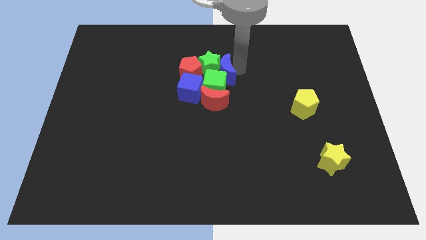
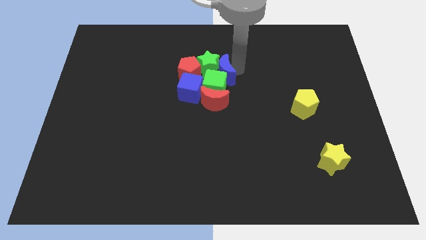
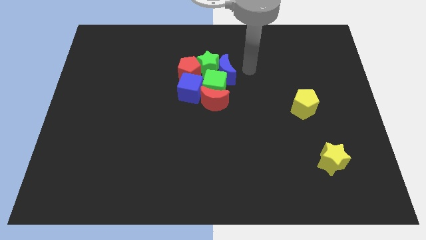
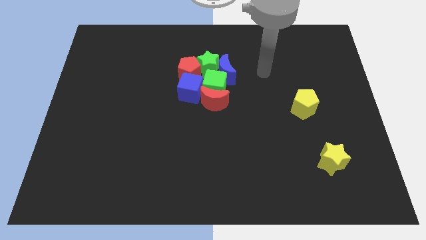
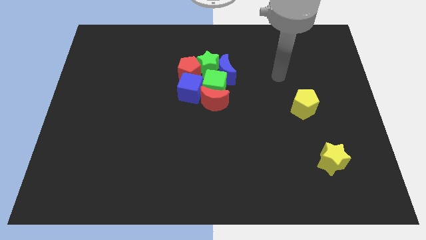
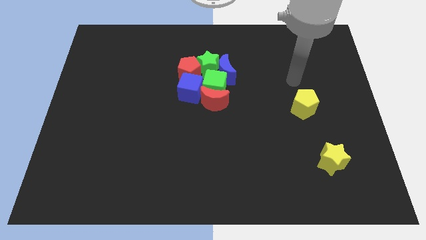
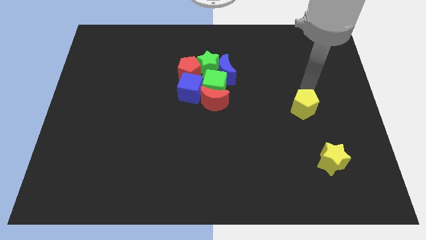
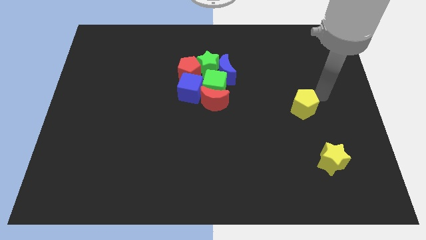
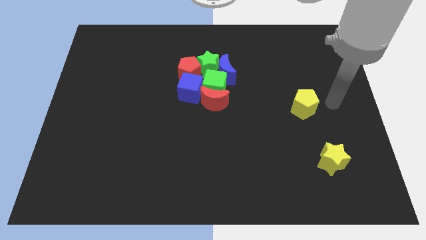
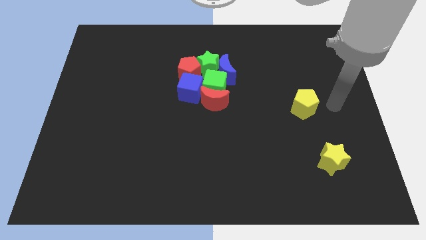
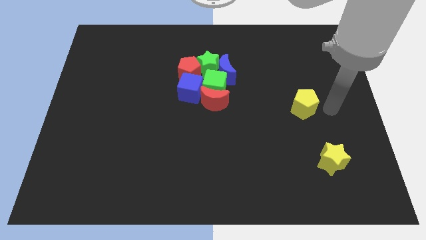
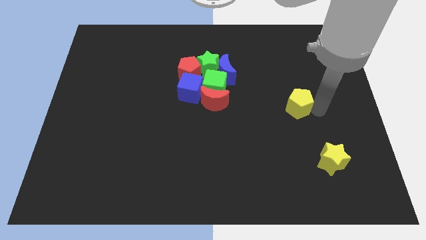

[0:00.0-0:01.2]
put your arm at the right side of the yellow pentagon

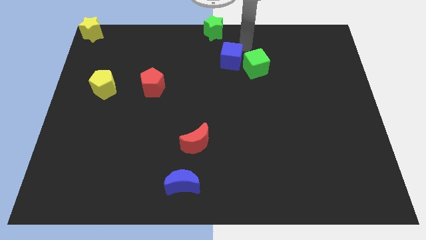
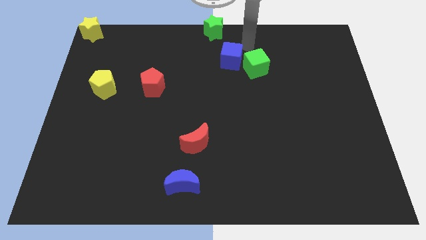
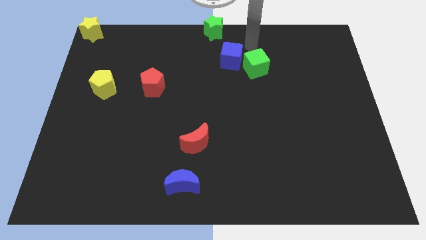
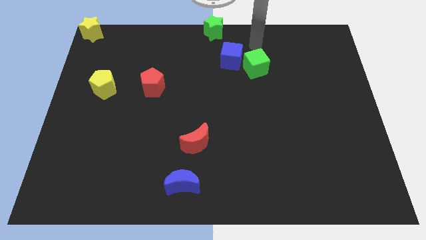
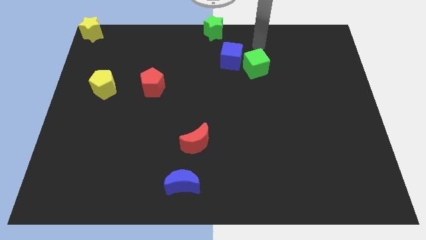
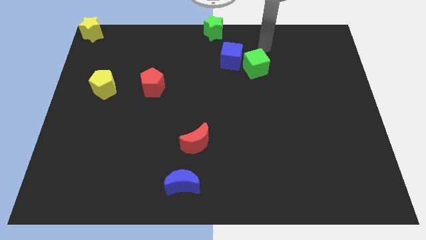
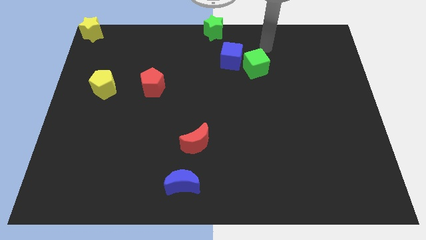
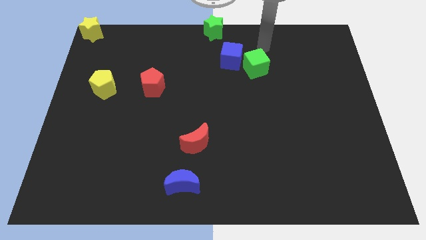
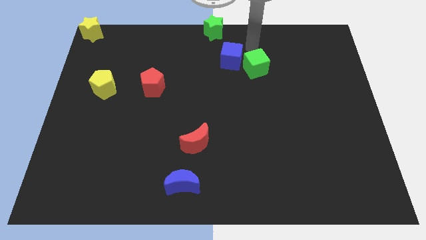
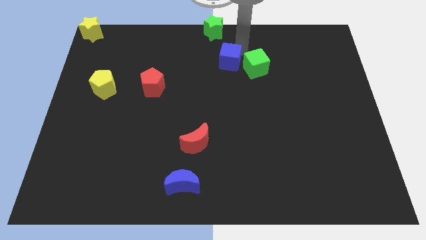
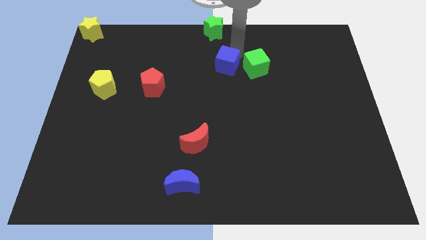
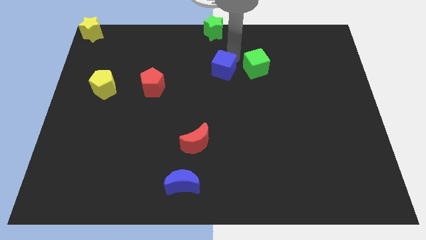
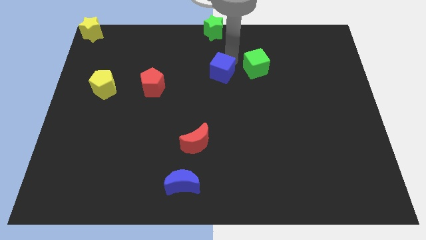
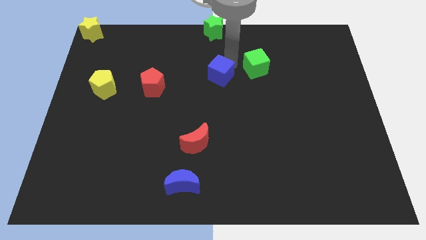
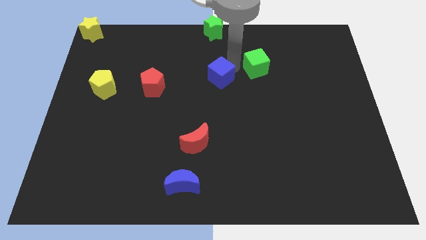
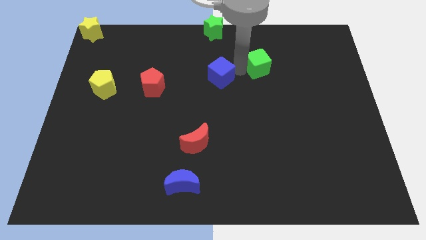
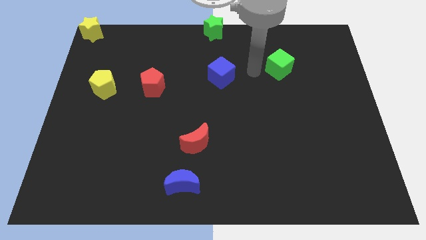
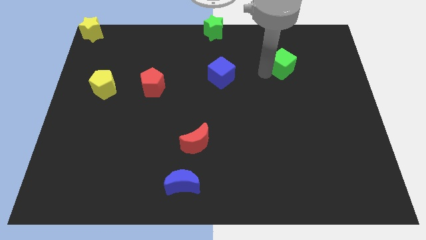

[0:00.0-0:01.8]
push the blue cube and green cube away from each other

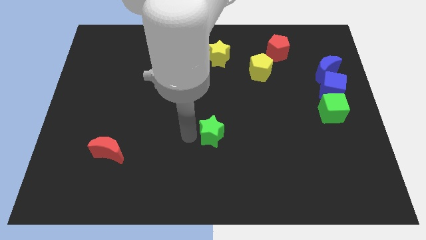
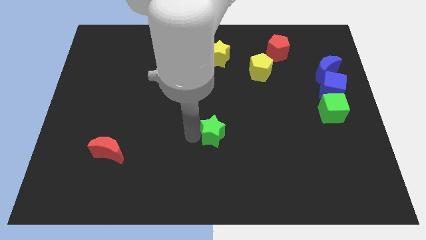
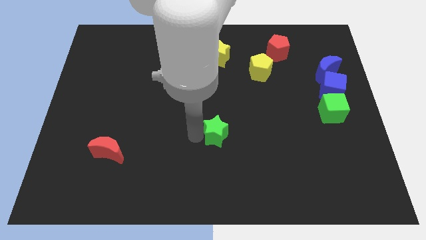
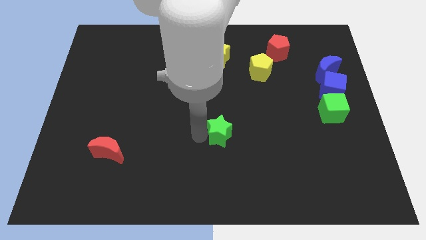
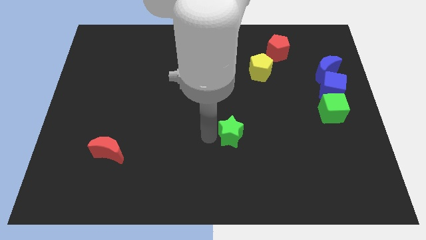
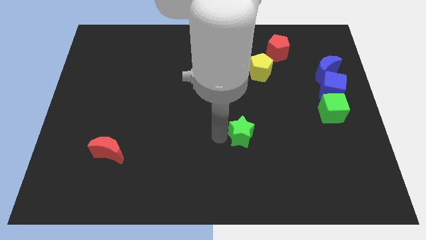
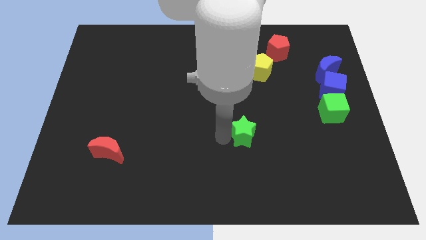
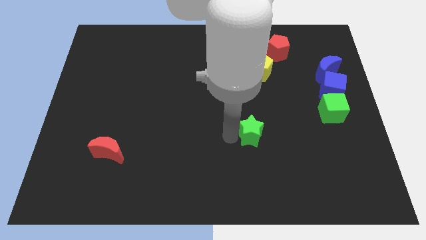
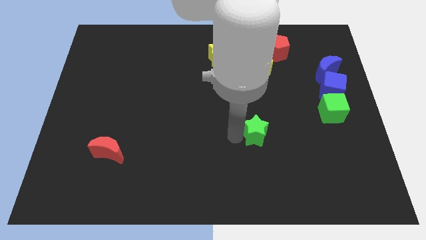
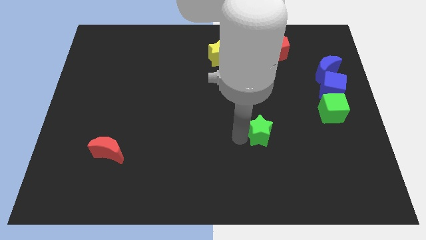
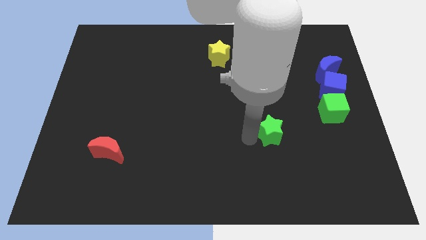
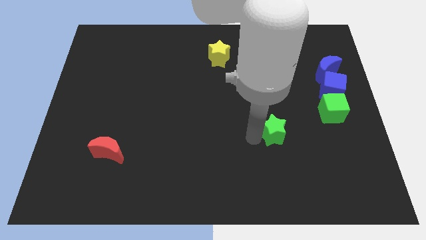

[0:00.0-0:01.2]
push the green star to the vertical bottom side of the yellow pentagon

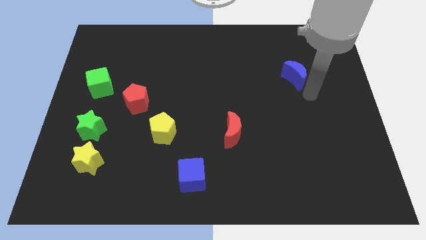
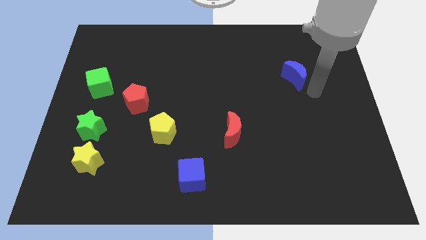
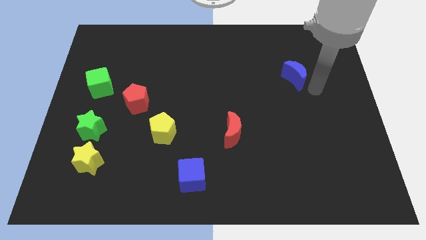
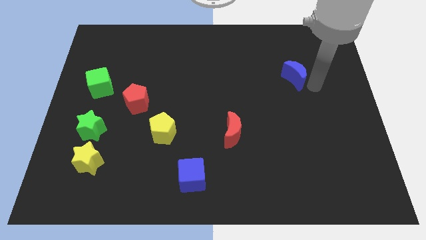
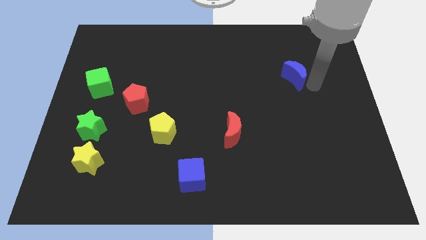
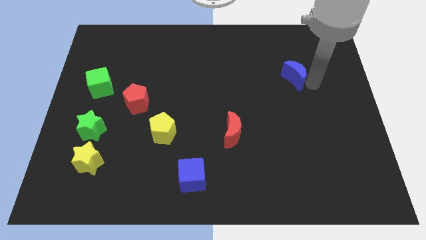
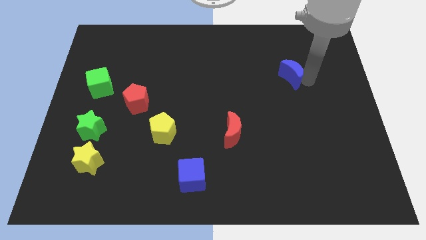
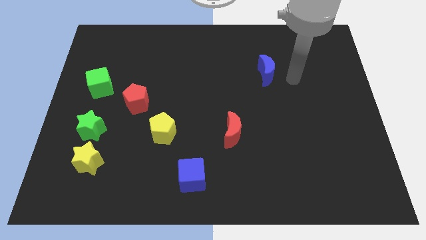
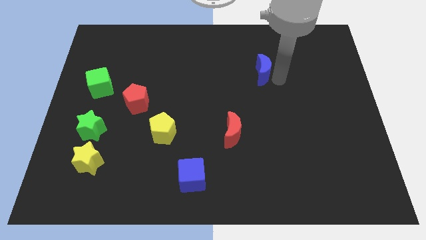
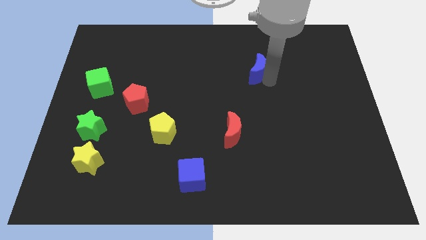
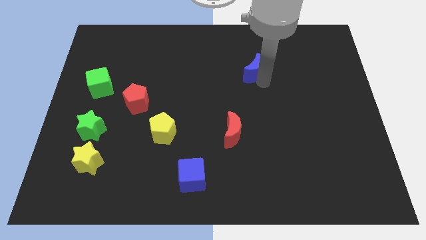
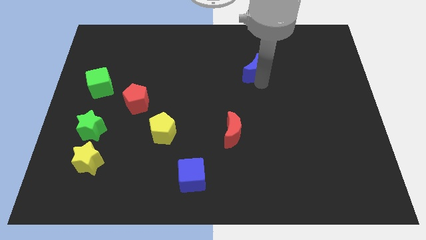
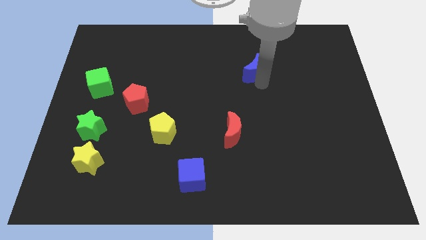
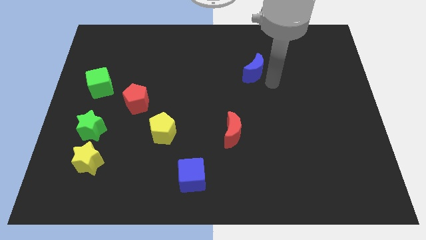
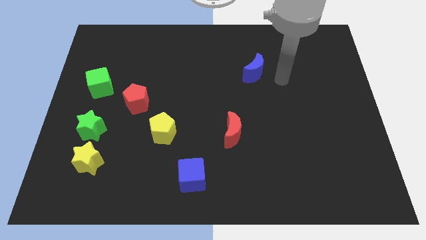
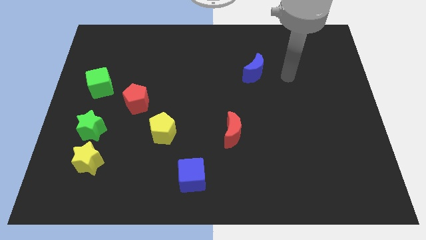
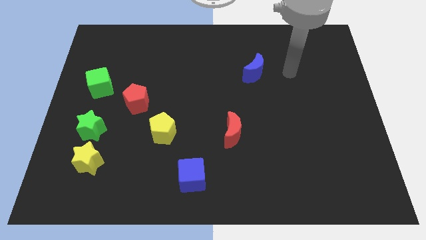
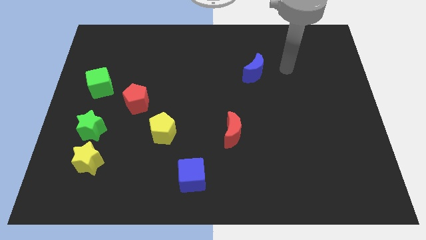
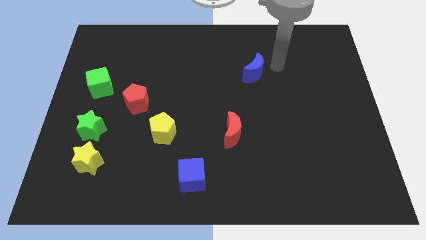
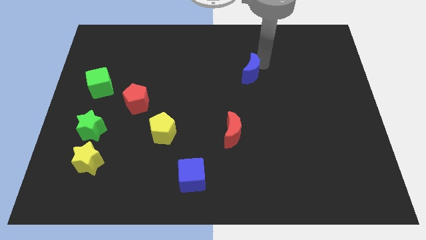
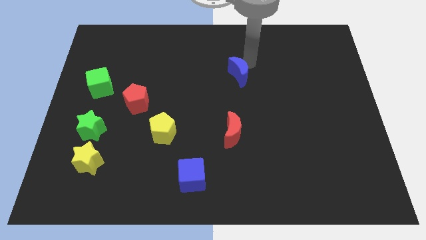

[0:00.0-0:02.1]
put the blue crescent from left center

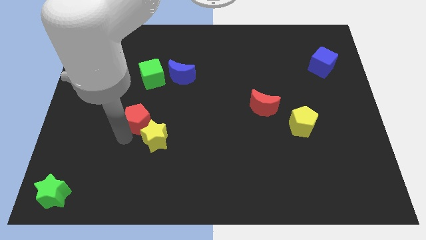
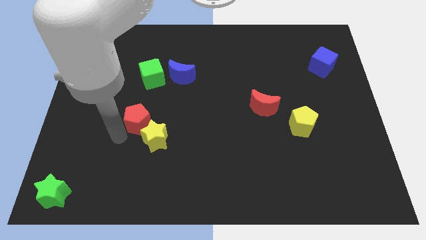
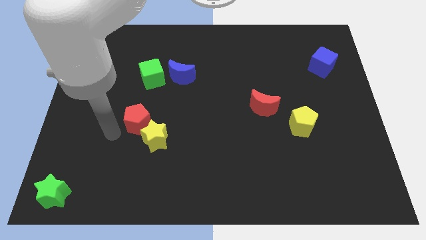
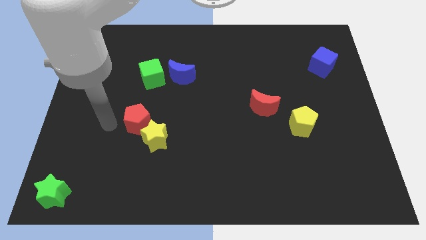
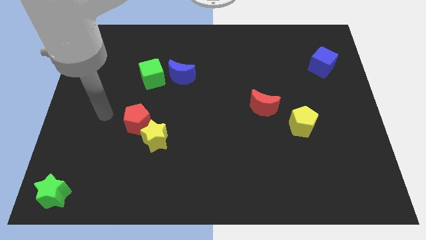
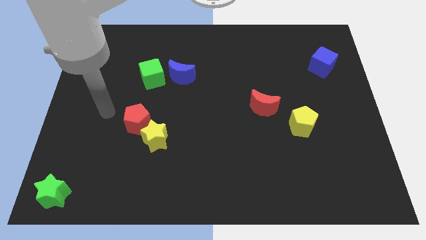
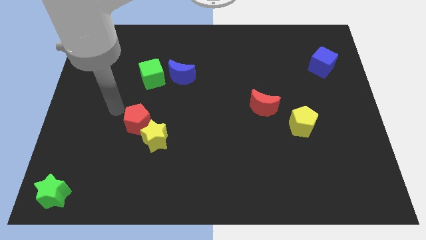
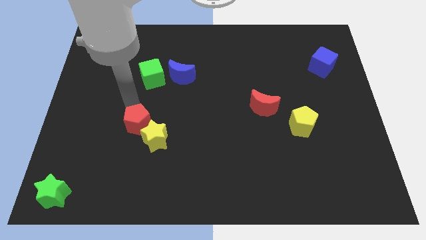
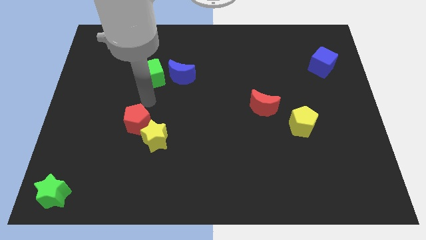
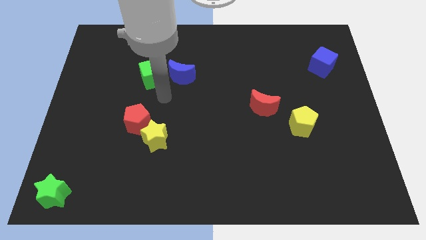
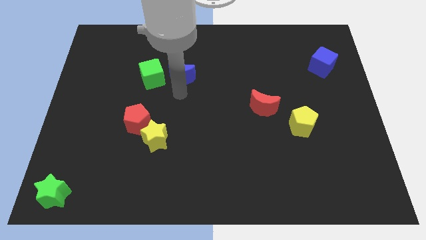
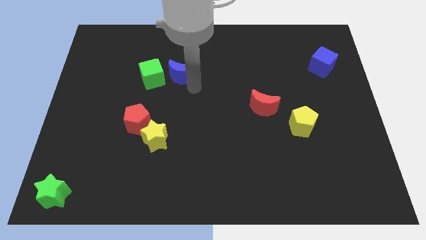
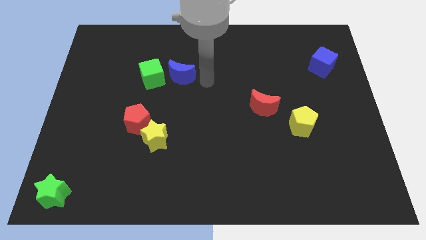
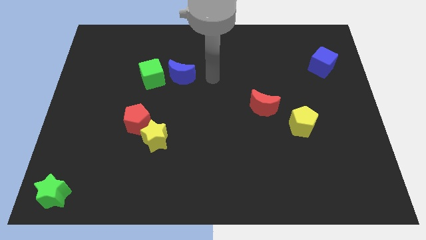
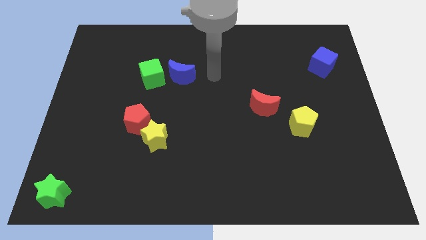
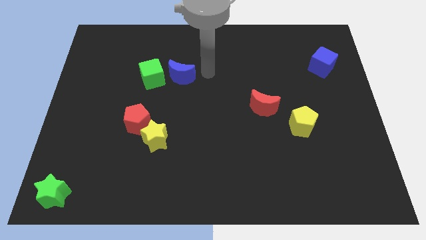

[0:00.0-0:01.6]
place your arm to the right side of blue moon

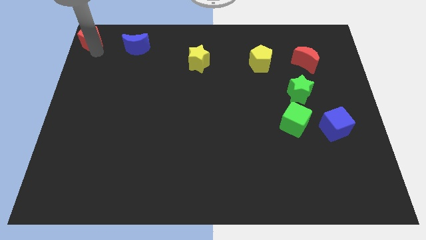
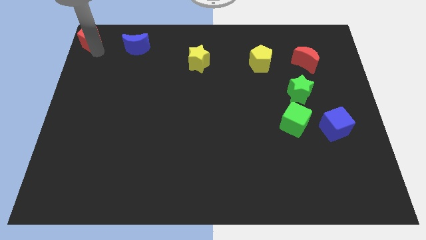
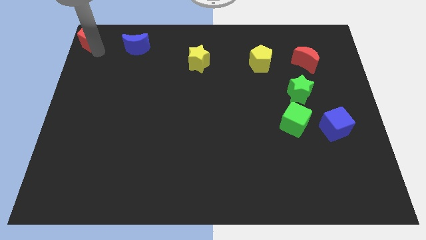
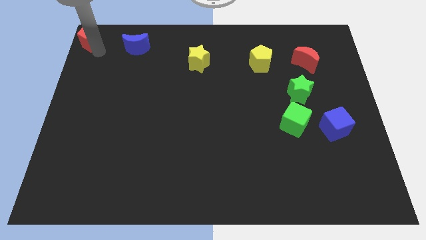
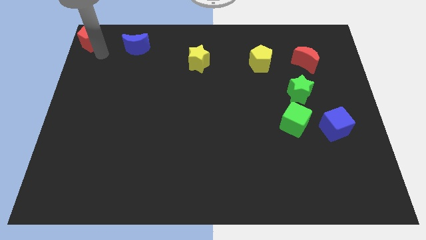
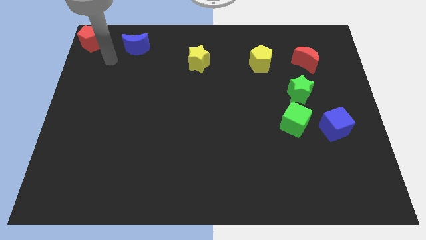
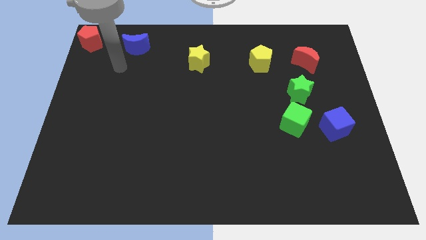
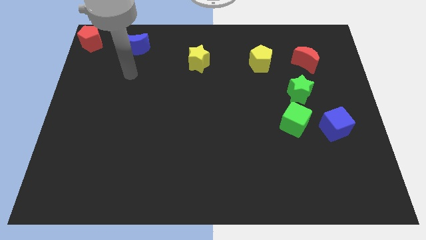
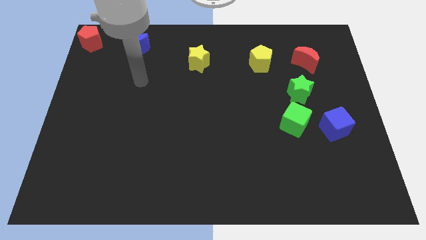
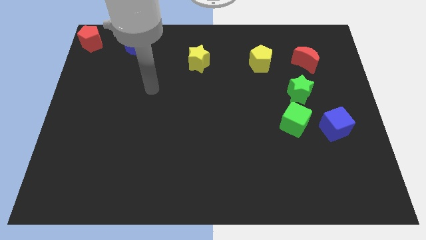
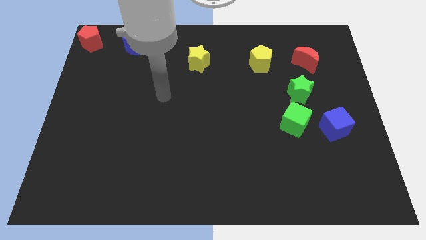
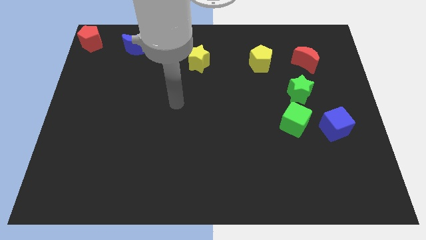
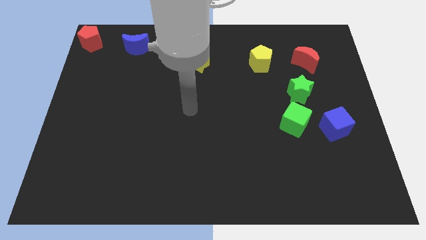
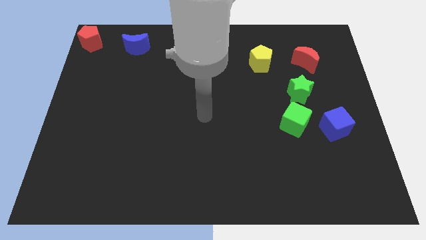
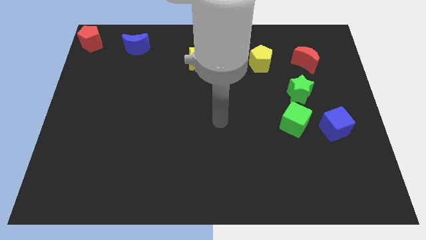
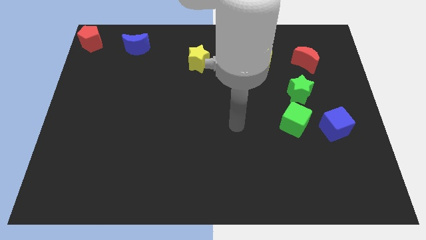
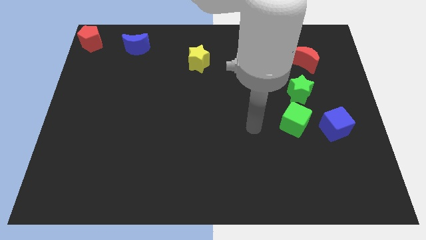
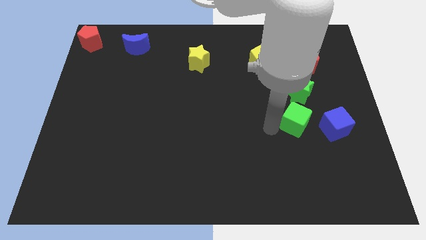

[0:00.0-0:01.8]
push your arm away from the red pentagon
